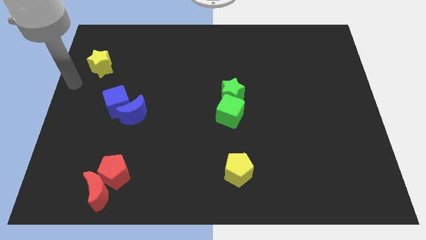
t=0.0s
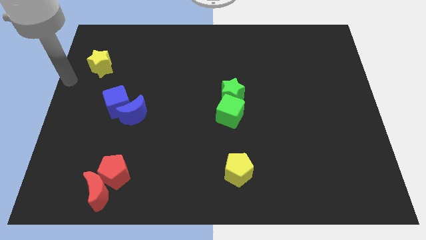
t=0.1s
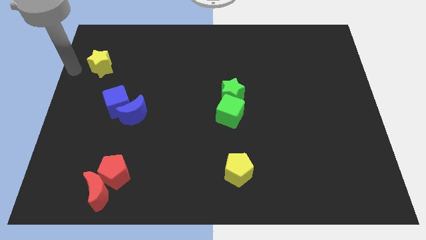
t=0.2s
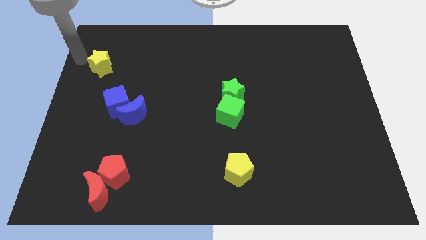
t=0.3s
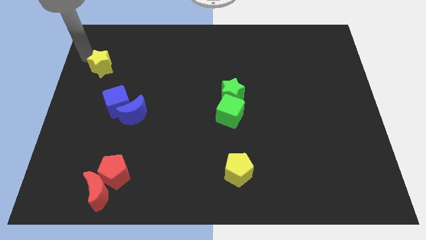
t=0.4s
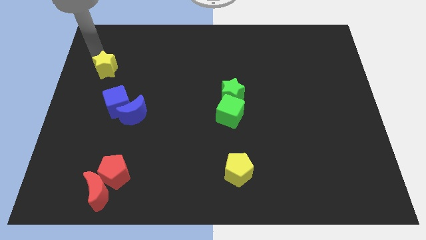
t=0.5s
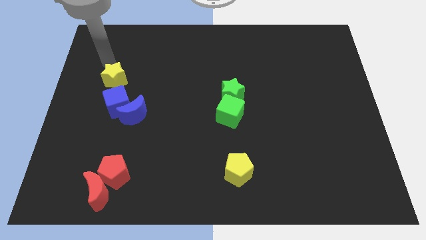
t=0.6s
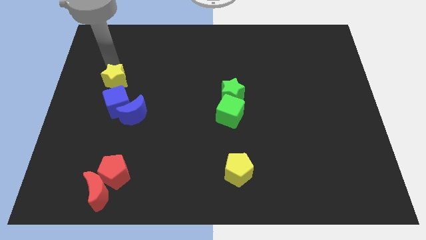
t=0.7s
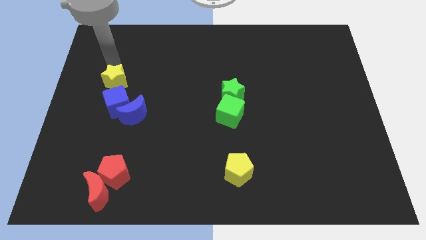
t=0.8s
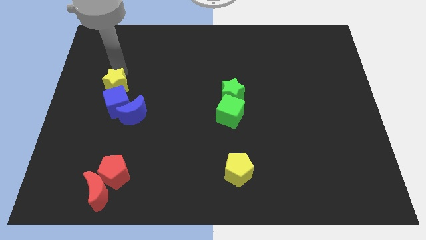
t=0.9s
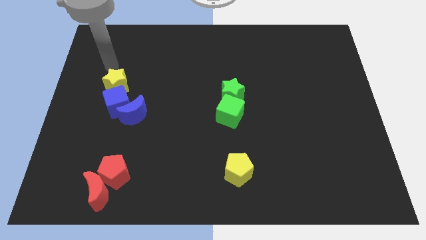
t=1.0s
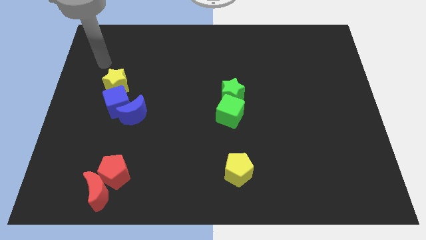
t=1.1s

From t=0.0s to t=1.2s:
push the yellow star towards the blue cube

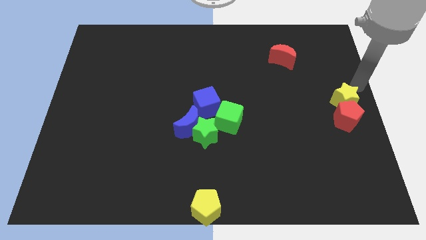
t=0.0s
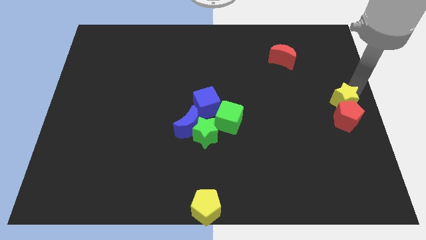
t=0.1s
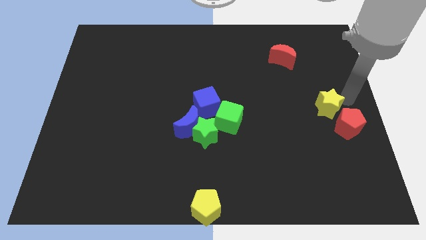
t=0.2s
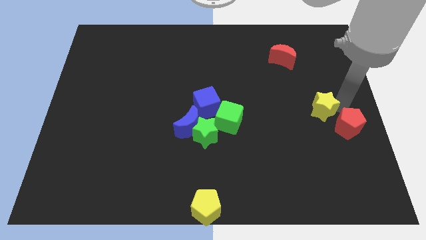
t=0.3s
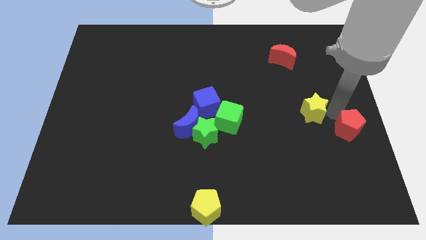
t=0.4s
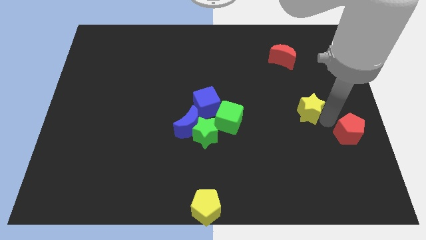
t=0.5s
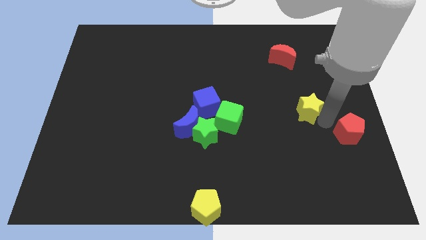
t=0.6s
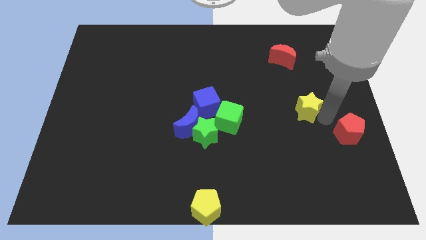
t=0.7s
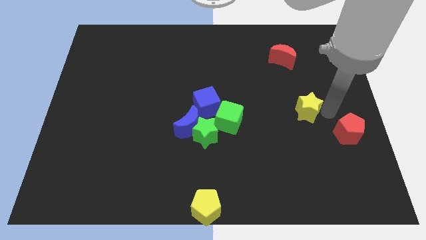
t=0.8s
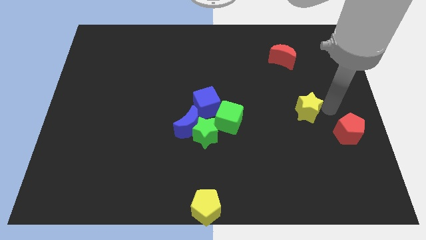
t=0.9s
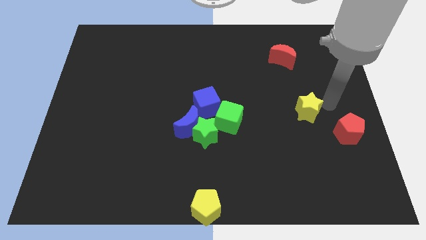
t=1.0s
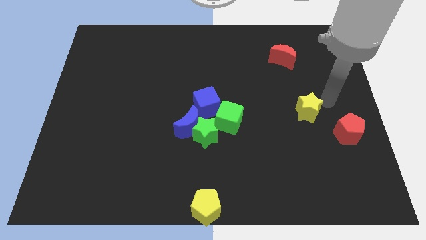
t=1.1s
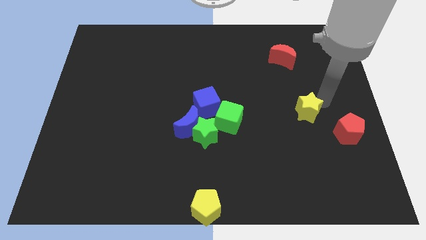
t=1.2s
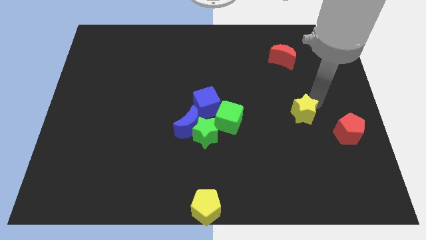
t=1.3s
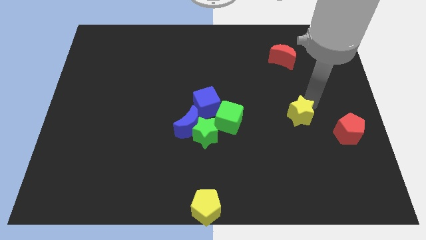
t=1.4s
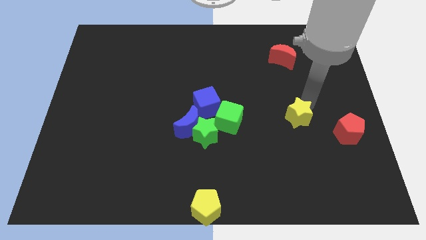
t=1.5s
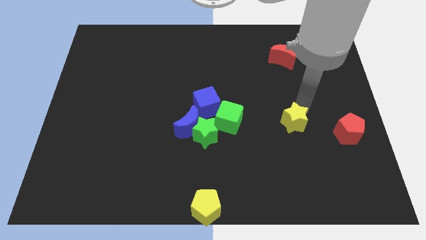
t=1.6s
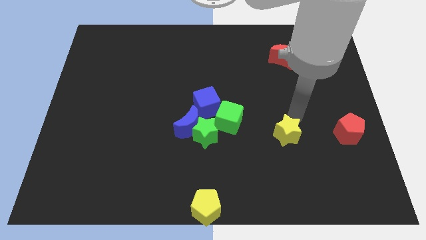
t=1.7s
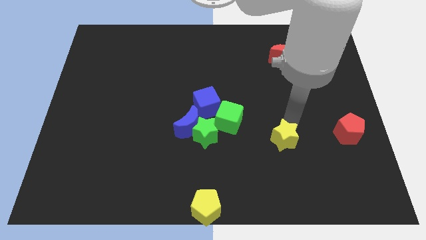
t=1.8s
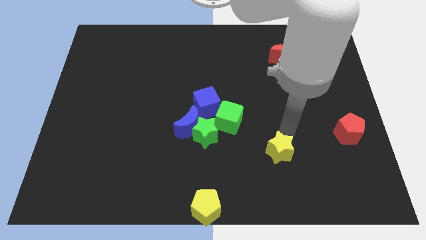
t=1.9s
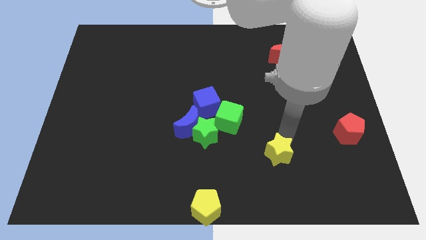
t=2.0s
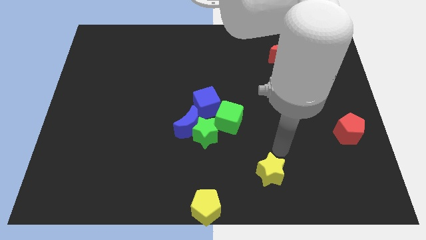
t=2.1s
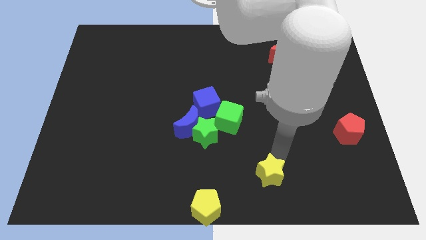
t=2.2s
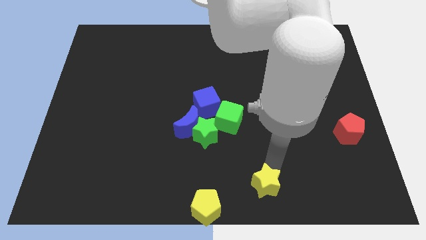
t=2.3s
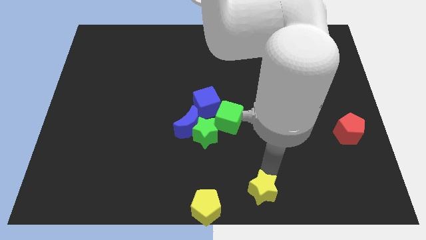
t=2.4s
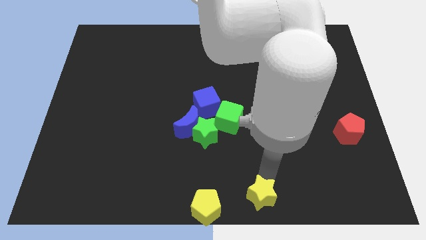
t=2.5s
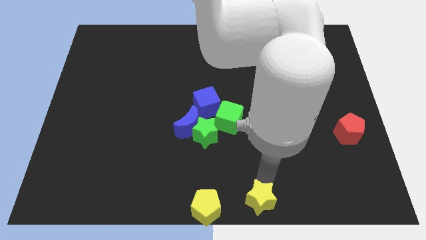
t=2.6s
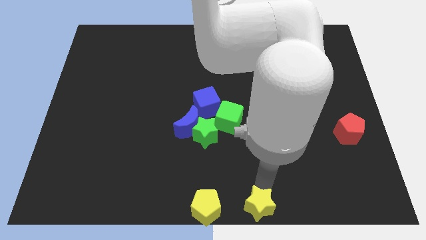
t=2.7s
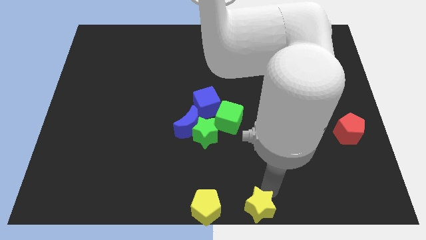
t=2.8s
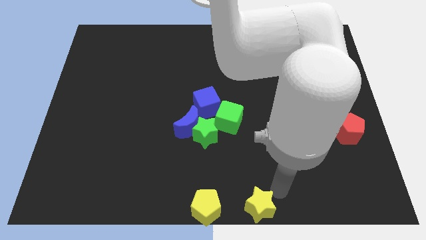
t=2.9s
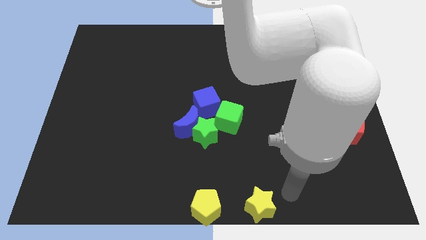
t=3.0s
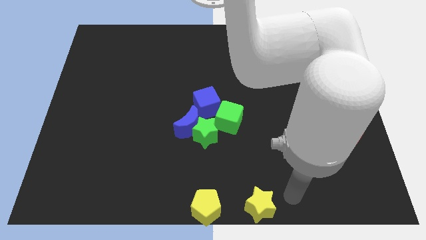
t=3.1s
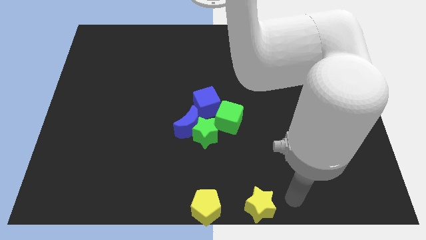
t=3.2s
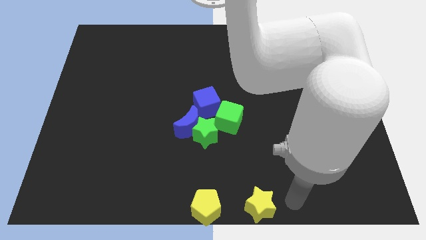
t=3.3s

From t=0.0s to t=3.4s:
drag the yellow star to the bottom of the board

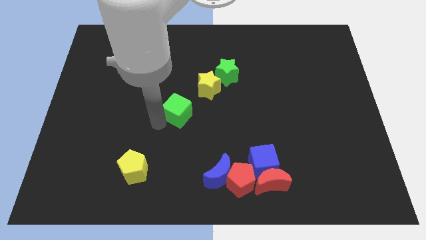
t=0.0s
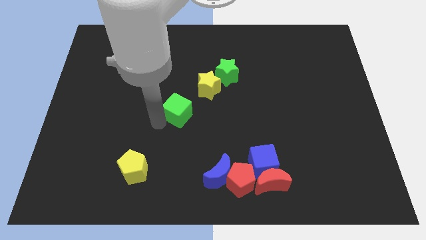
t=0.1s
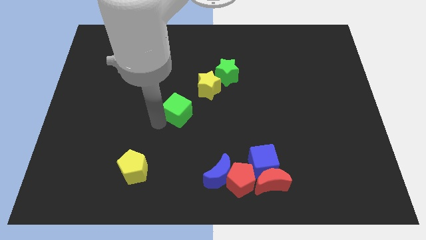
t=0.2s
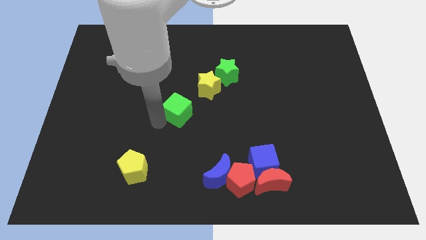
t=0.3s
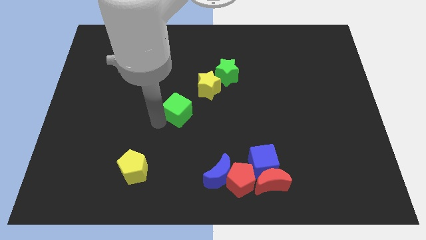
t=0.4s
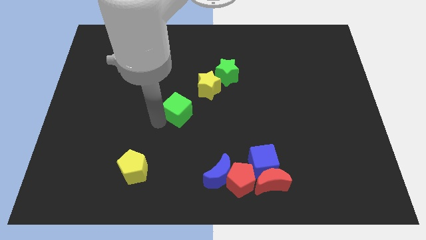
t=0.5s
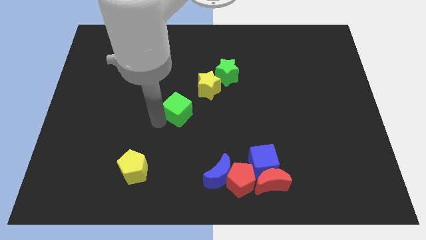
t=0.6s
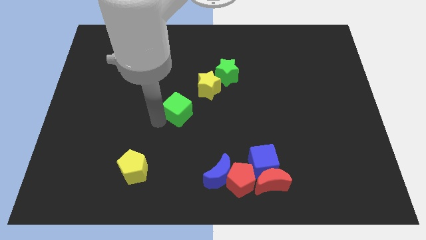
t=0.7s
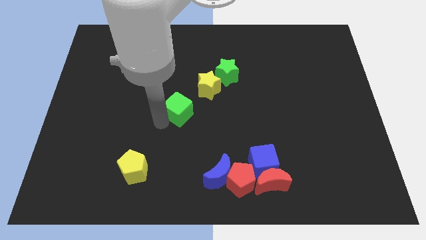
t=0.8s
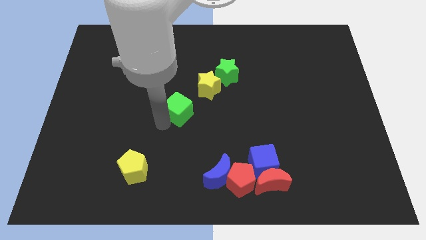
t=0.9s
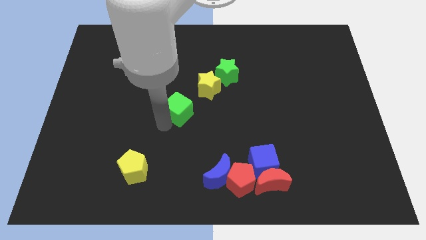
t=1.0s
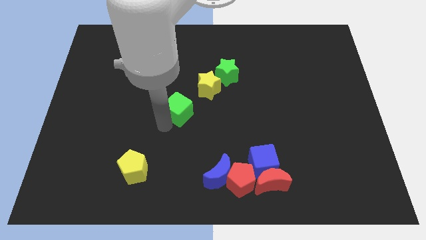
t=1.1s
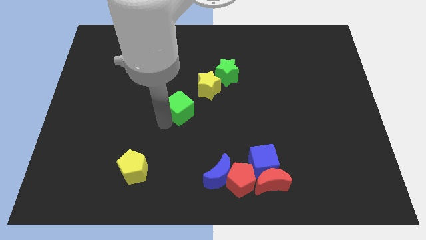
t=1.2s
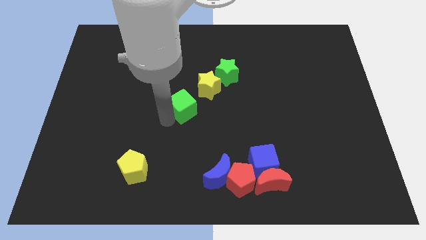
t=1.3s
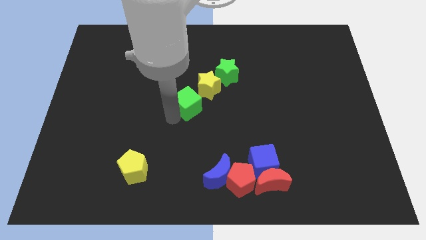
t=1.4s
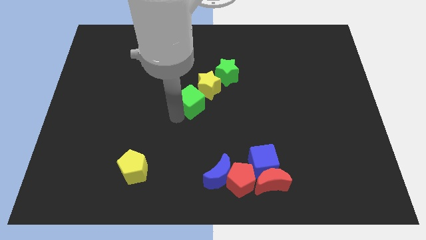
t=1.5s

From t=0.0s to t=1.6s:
push green cube into yellow star

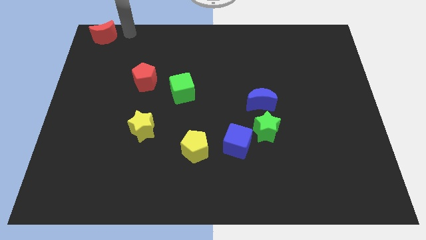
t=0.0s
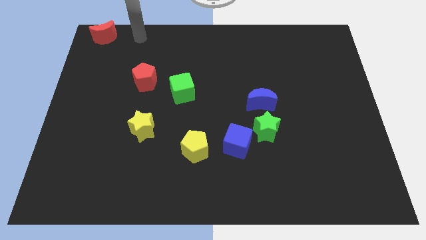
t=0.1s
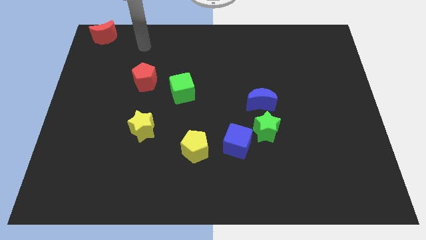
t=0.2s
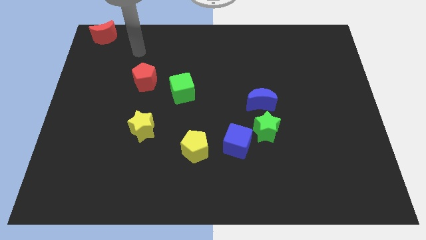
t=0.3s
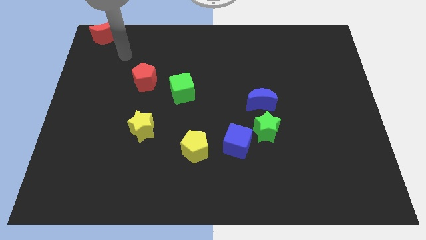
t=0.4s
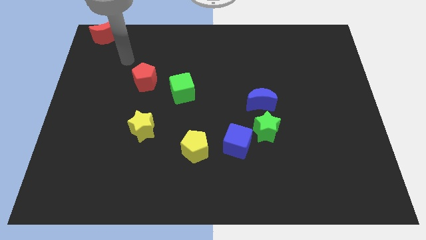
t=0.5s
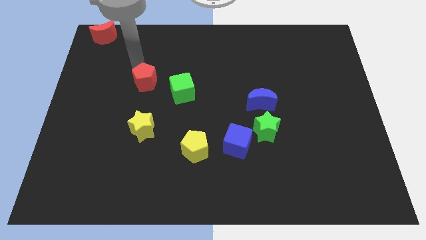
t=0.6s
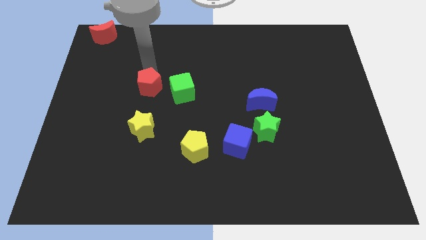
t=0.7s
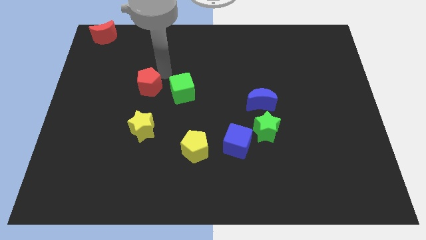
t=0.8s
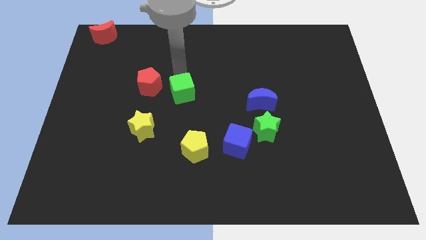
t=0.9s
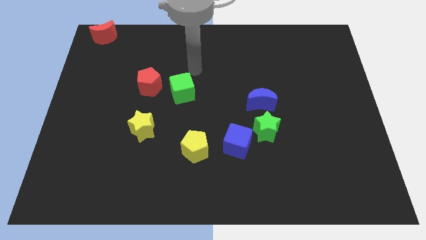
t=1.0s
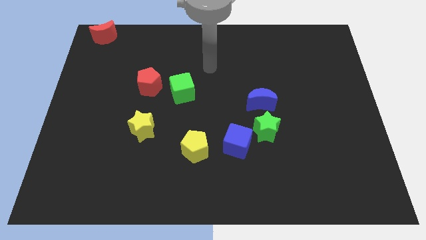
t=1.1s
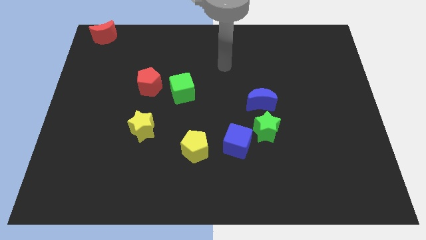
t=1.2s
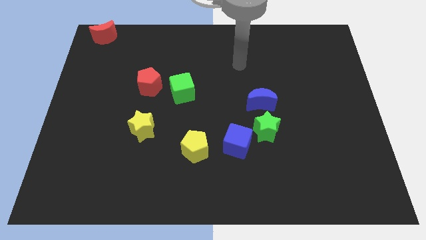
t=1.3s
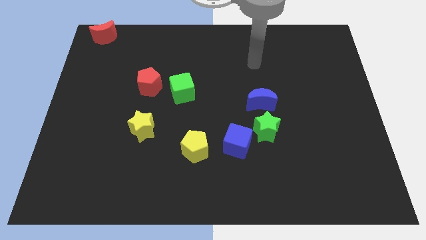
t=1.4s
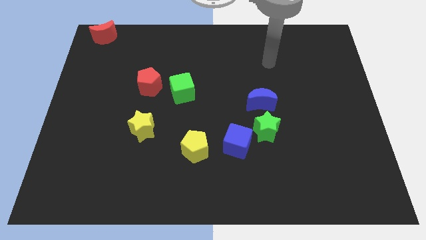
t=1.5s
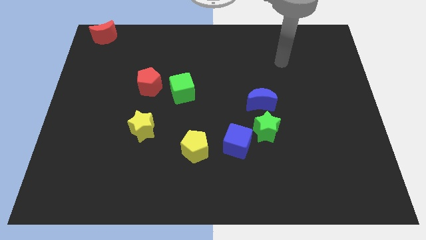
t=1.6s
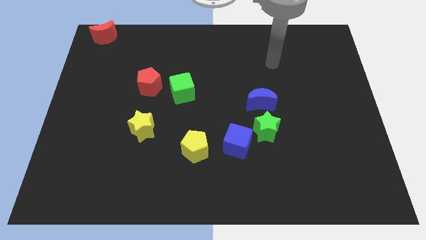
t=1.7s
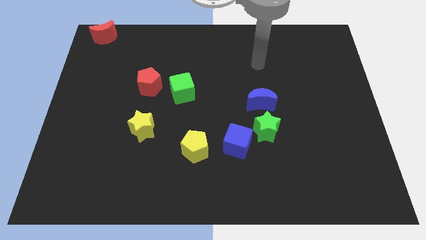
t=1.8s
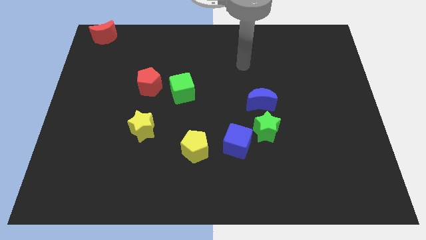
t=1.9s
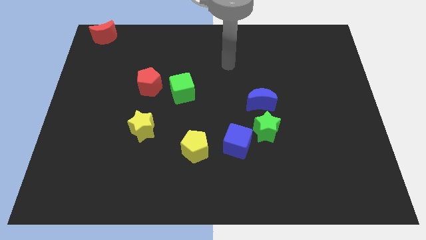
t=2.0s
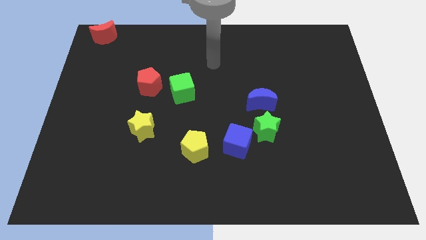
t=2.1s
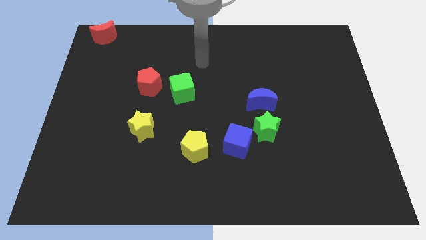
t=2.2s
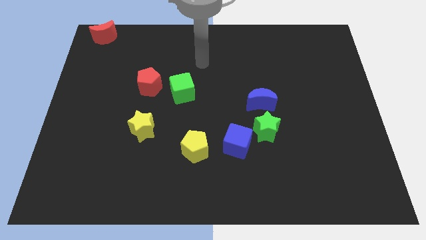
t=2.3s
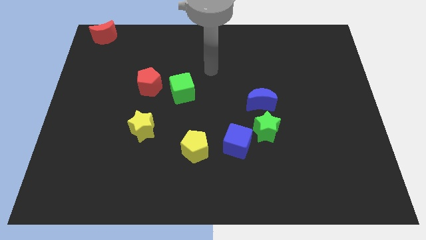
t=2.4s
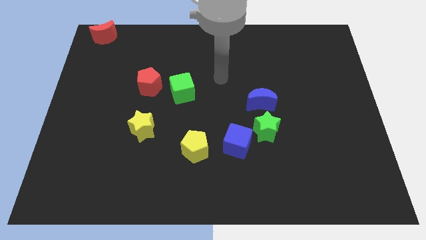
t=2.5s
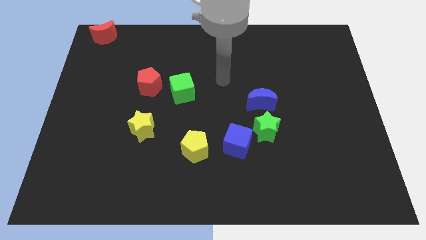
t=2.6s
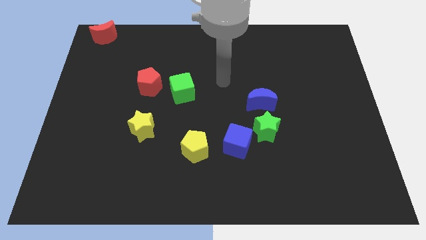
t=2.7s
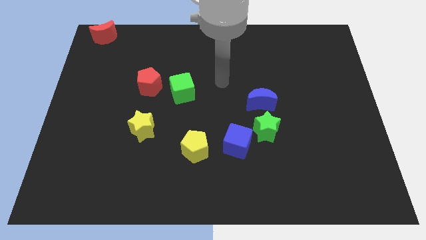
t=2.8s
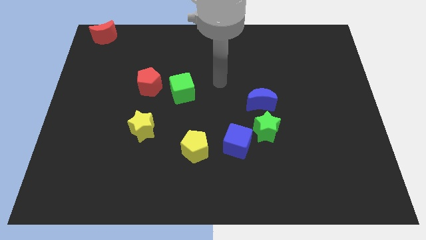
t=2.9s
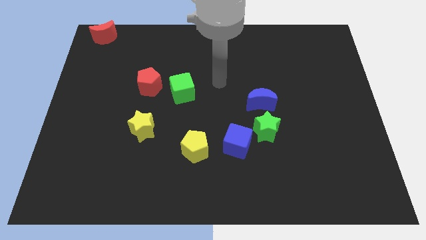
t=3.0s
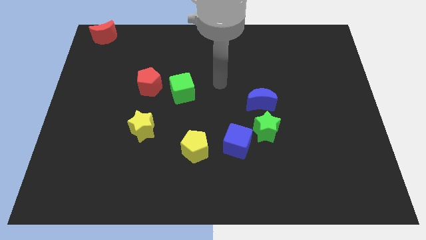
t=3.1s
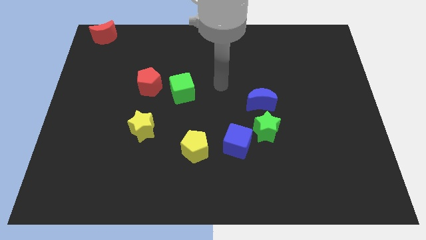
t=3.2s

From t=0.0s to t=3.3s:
tap the red pentagon
